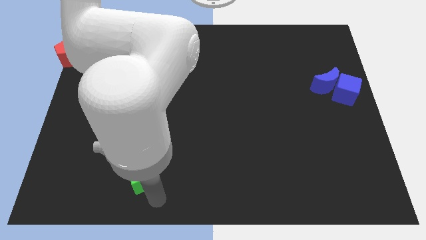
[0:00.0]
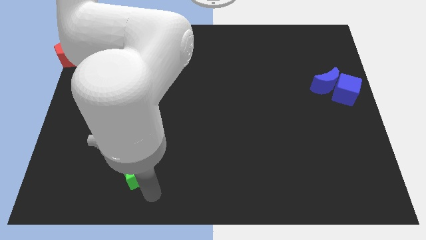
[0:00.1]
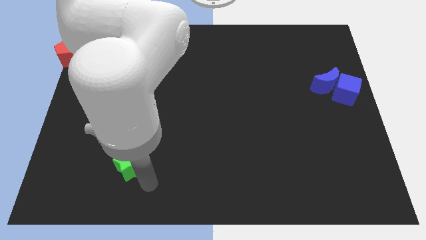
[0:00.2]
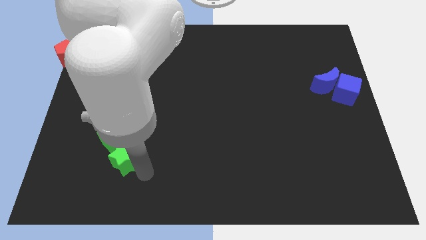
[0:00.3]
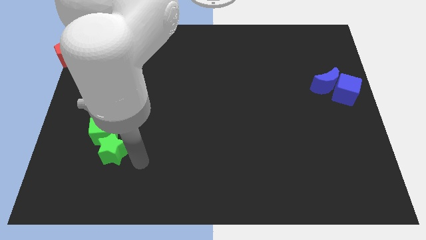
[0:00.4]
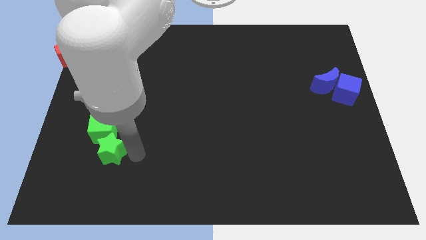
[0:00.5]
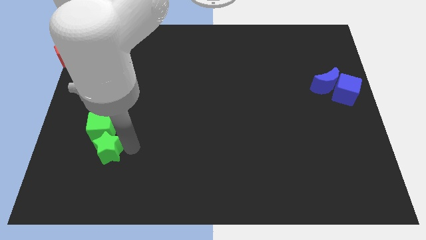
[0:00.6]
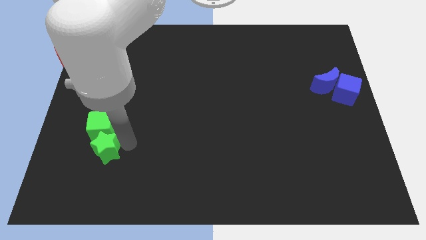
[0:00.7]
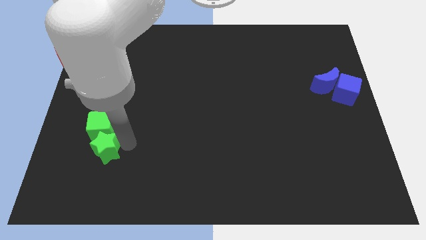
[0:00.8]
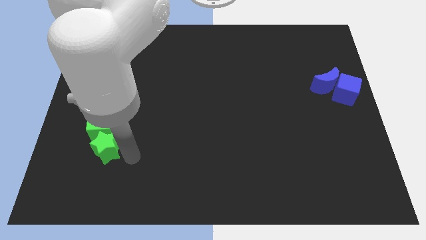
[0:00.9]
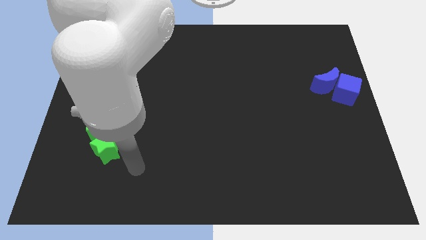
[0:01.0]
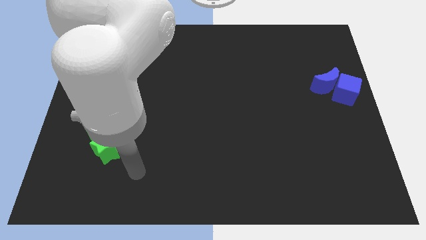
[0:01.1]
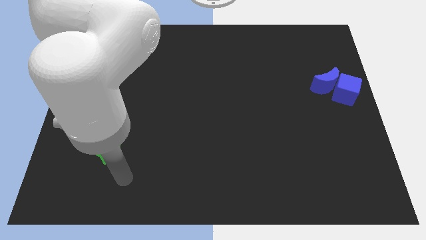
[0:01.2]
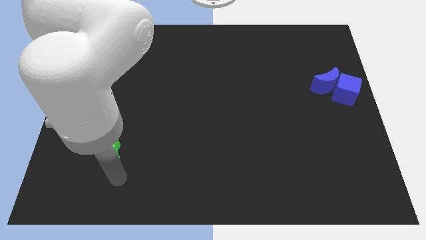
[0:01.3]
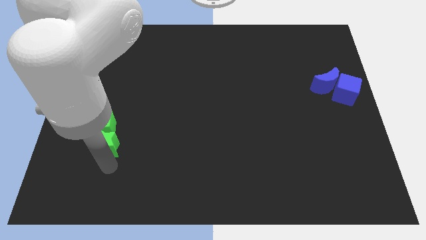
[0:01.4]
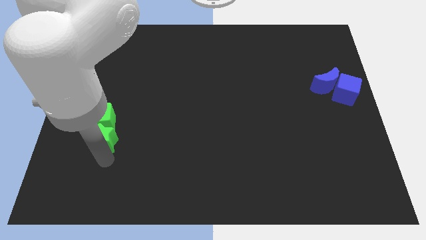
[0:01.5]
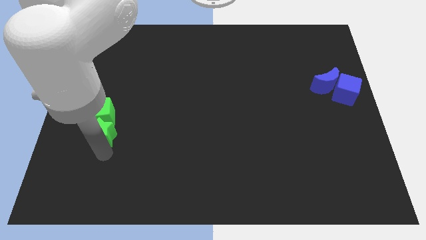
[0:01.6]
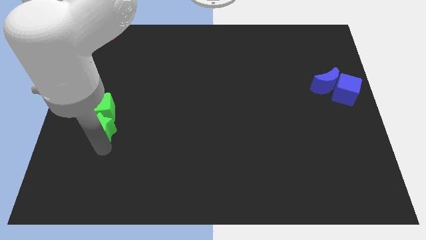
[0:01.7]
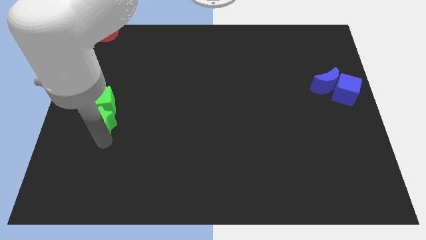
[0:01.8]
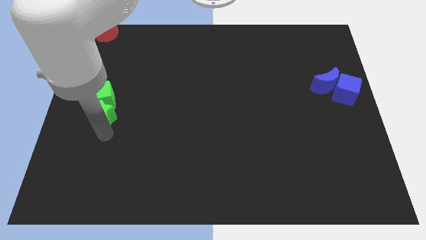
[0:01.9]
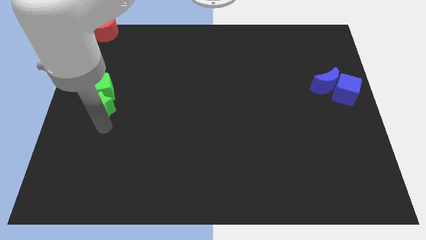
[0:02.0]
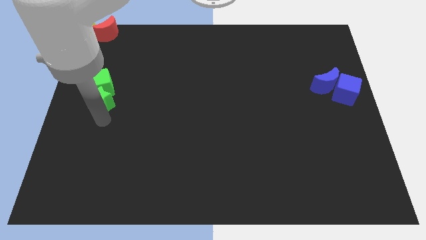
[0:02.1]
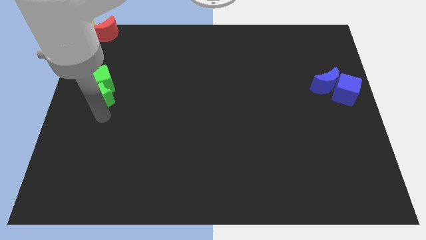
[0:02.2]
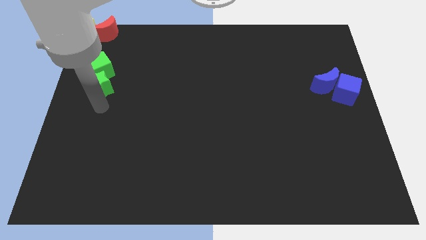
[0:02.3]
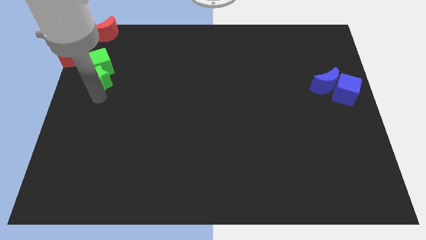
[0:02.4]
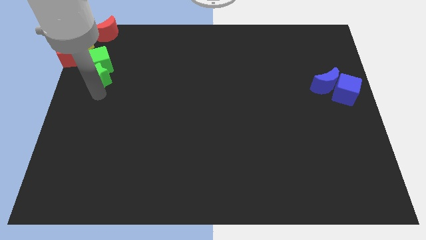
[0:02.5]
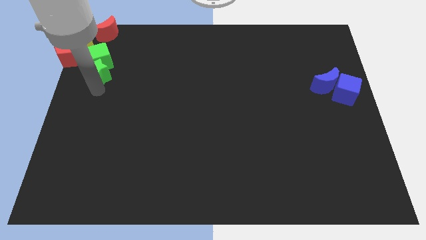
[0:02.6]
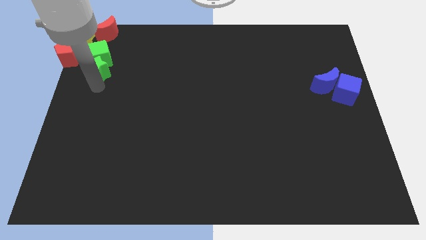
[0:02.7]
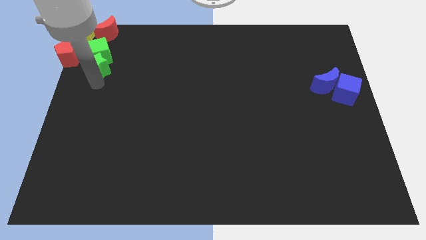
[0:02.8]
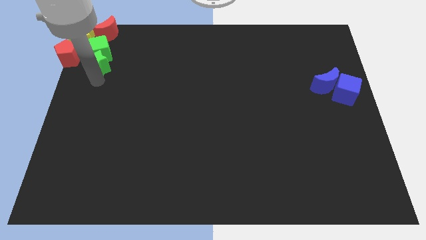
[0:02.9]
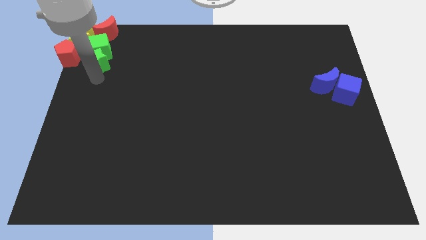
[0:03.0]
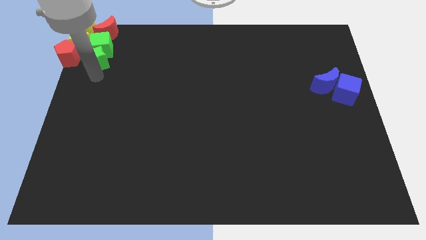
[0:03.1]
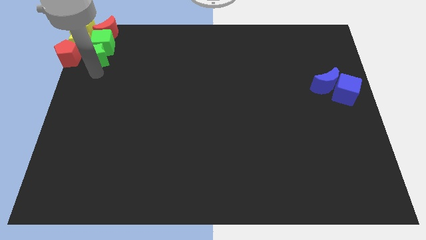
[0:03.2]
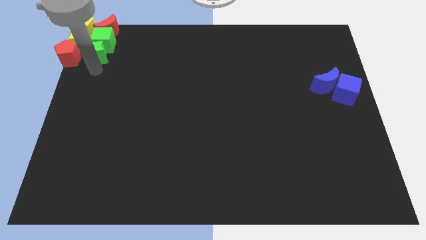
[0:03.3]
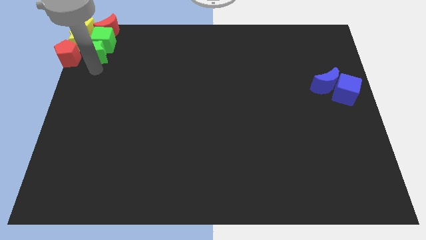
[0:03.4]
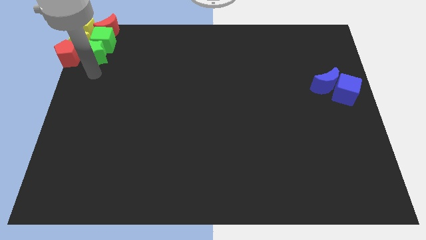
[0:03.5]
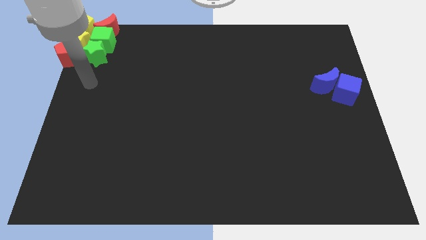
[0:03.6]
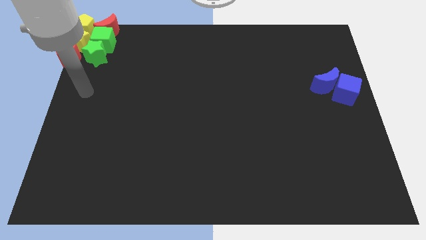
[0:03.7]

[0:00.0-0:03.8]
move the green star and green cube towards the group of blocks

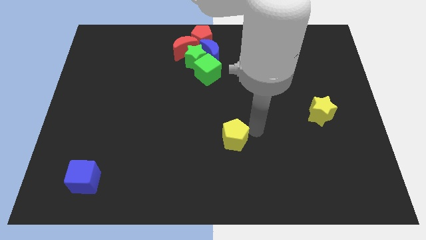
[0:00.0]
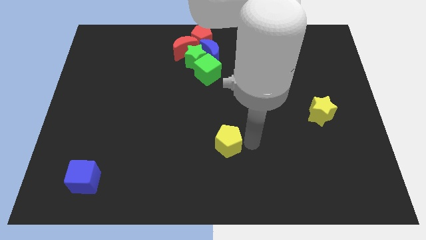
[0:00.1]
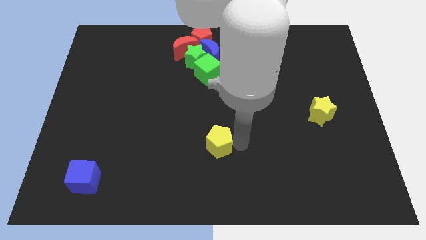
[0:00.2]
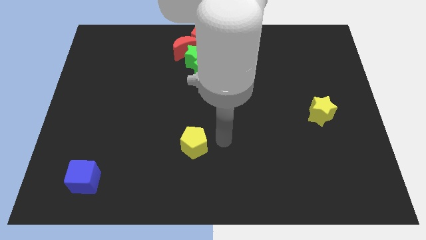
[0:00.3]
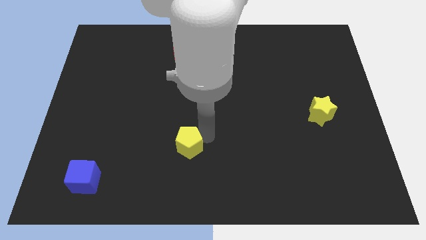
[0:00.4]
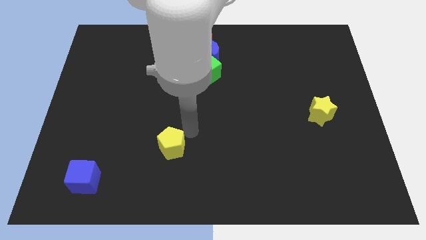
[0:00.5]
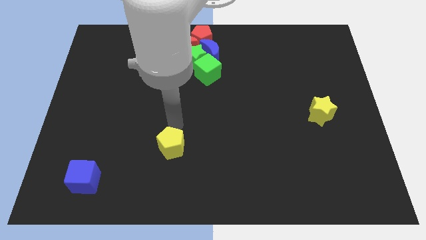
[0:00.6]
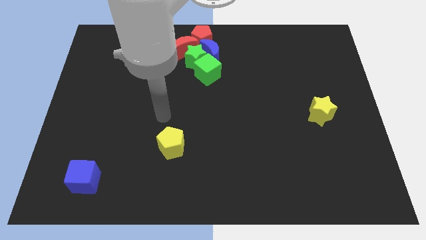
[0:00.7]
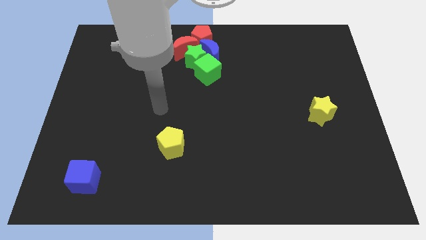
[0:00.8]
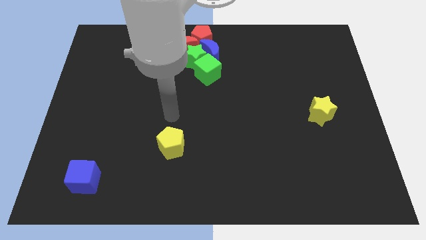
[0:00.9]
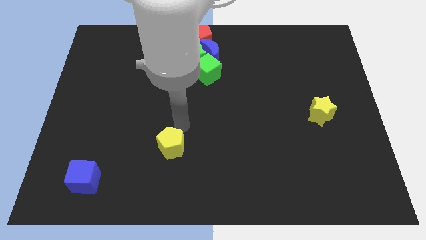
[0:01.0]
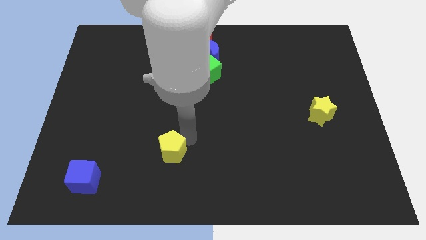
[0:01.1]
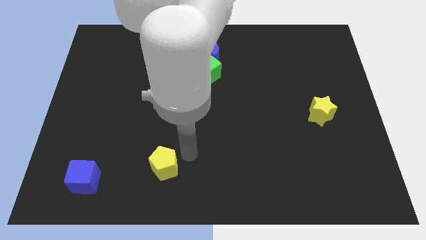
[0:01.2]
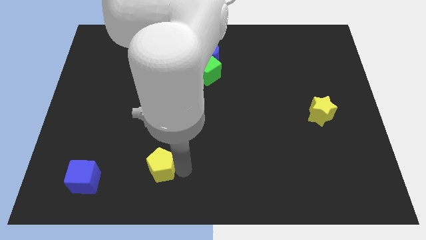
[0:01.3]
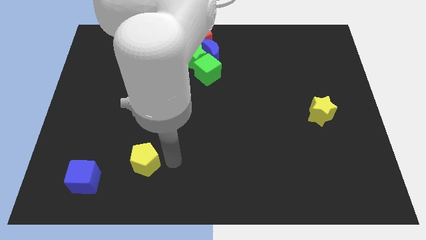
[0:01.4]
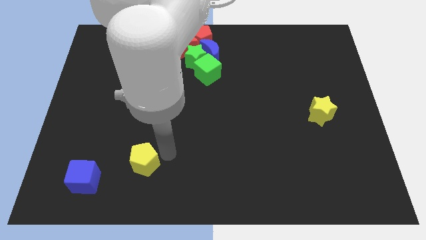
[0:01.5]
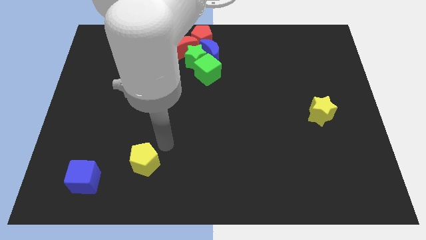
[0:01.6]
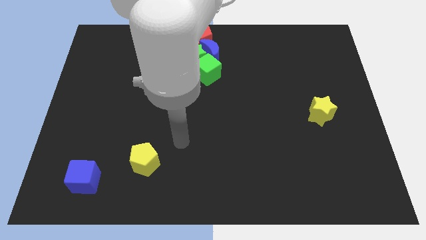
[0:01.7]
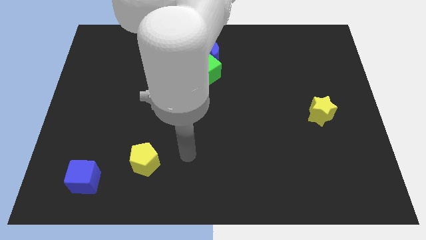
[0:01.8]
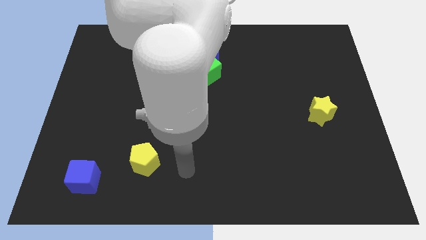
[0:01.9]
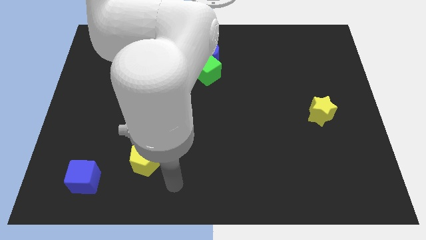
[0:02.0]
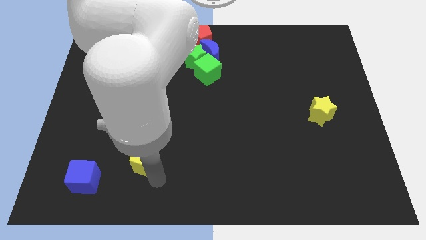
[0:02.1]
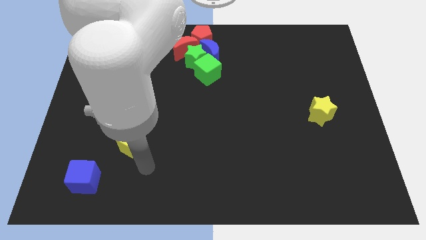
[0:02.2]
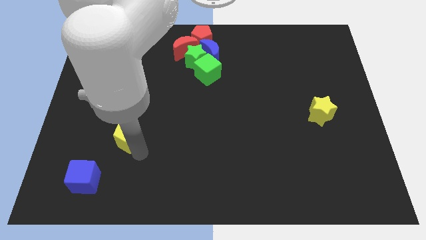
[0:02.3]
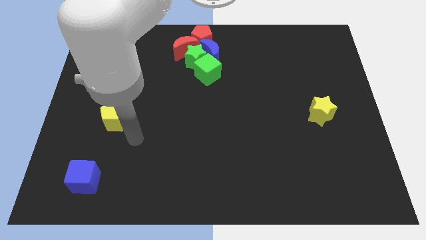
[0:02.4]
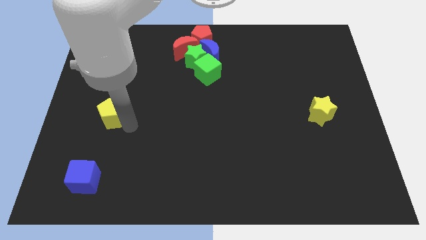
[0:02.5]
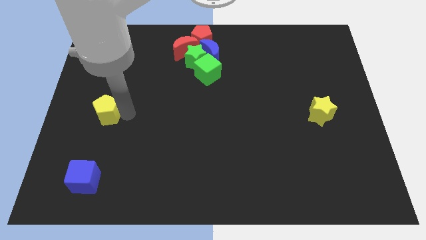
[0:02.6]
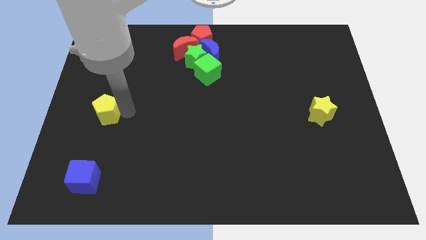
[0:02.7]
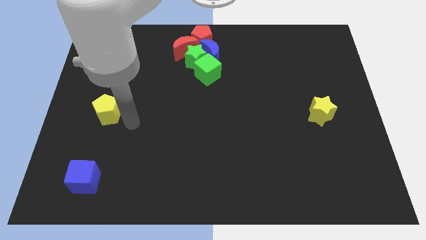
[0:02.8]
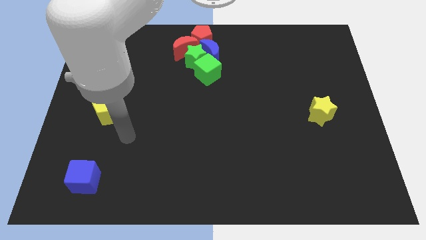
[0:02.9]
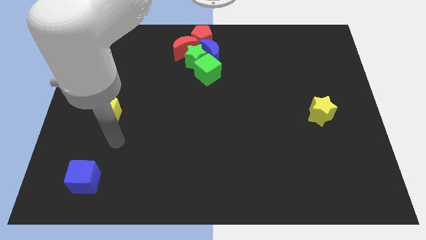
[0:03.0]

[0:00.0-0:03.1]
place yellow pentagon above blue cube vertically

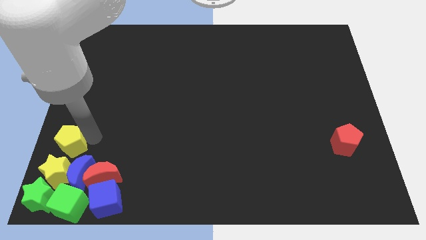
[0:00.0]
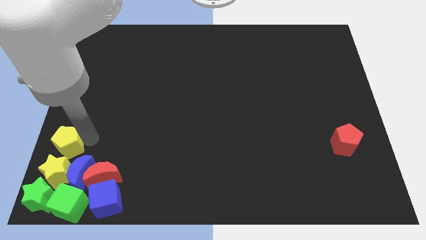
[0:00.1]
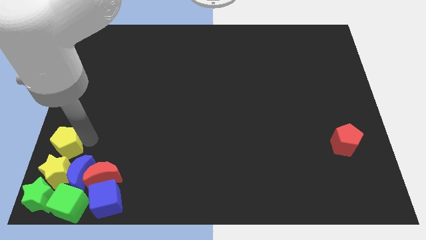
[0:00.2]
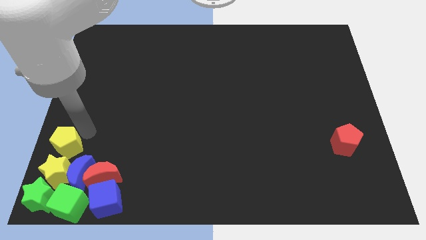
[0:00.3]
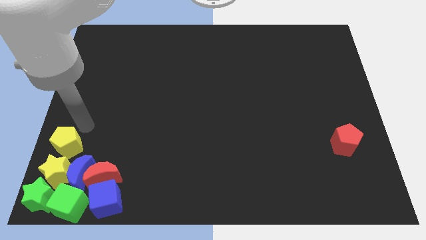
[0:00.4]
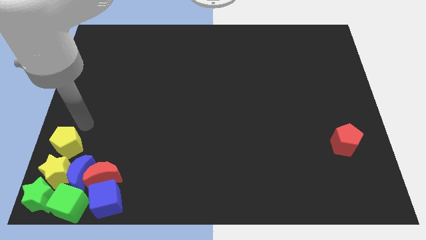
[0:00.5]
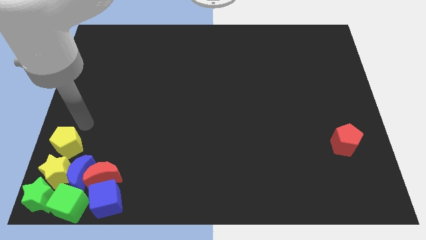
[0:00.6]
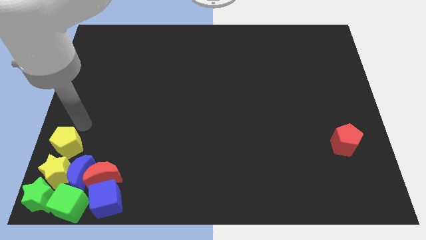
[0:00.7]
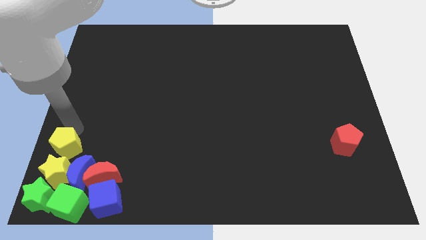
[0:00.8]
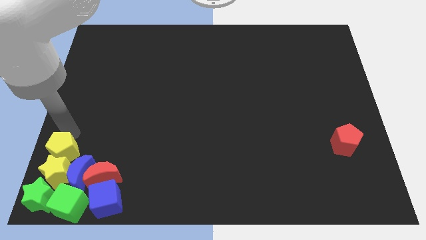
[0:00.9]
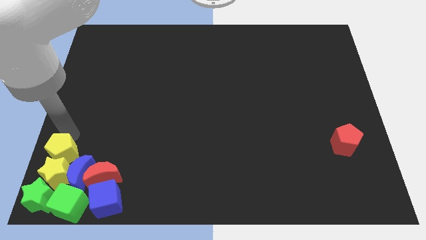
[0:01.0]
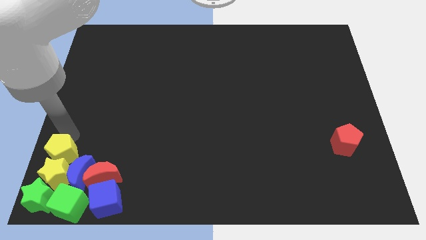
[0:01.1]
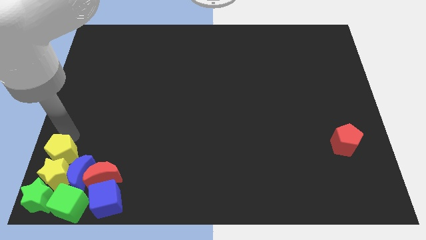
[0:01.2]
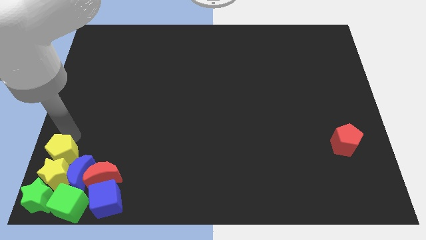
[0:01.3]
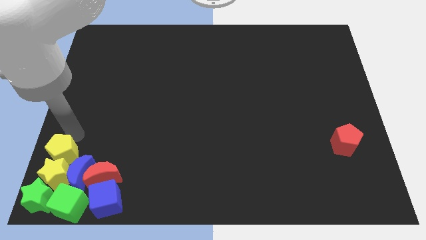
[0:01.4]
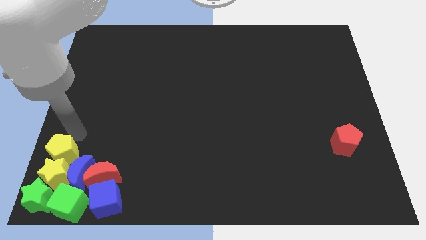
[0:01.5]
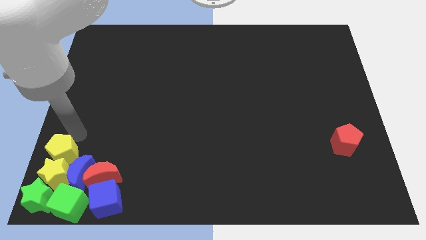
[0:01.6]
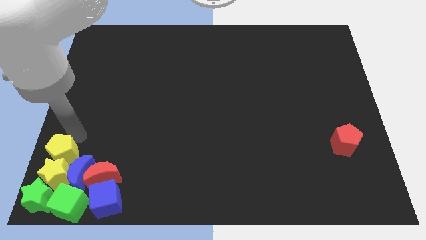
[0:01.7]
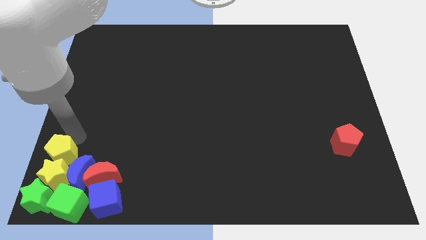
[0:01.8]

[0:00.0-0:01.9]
push the yellow pentagon into the yellow star

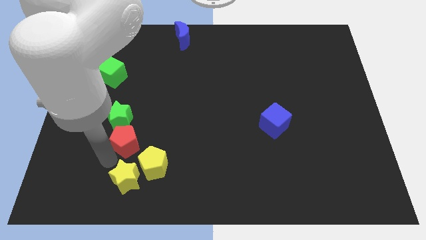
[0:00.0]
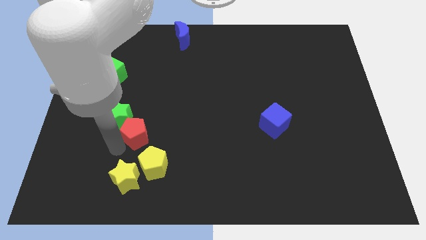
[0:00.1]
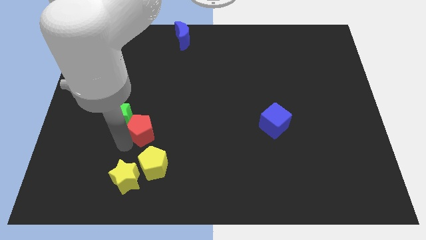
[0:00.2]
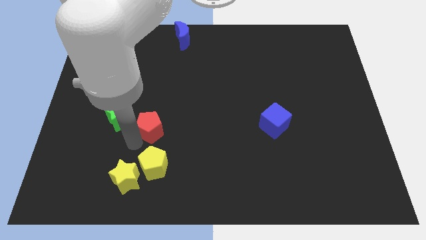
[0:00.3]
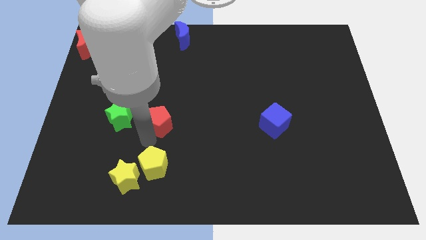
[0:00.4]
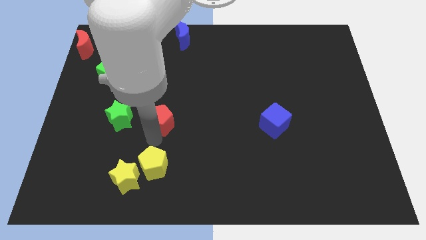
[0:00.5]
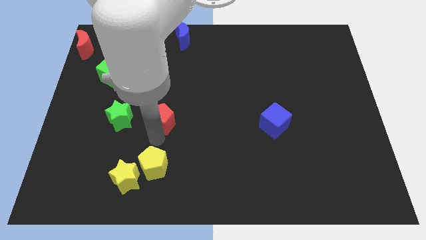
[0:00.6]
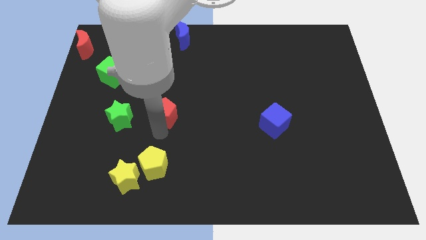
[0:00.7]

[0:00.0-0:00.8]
place the red pentagon to the right of the green star
